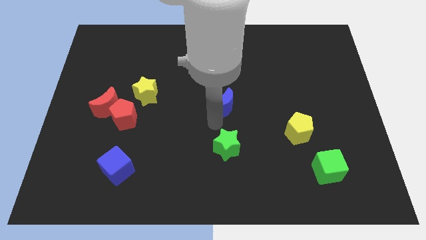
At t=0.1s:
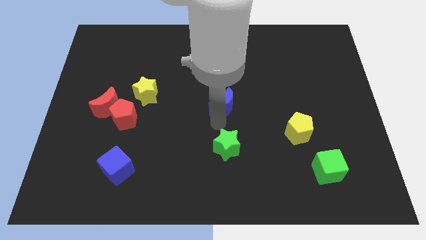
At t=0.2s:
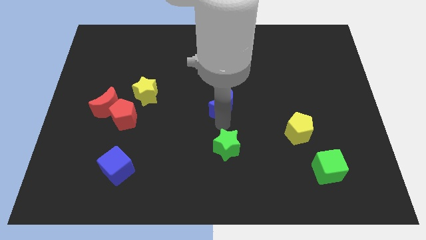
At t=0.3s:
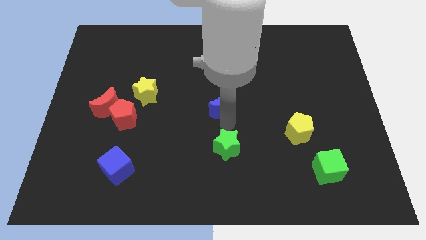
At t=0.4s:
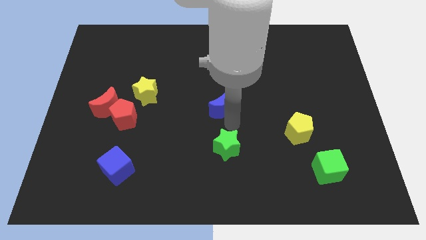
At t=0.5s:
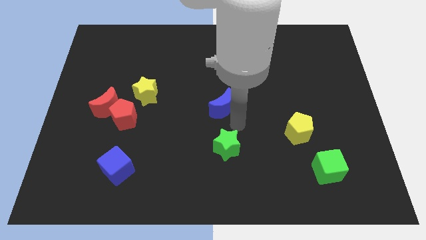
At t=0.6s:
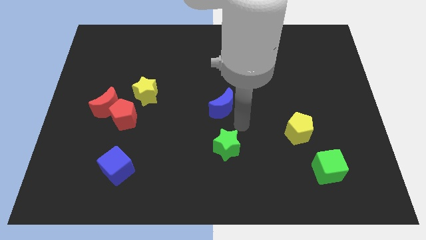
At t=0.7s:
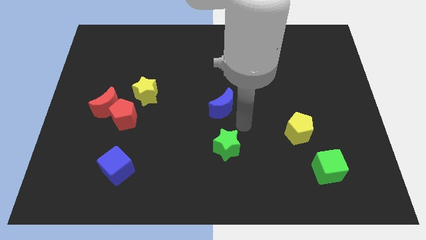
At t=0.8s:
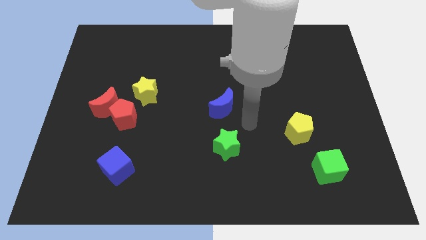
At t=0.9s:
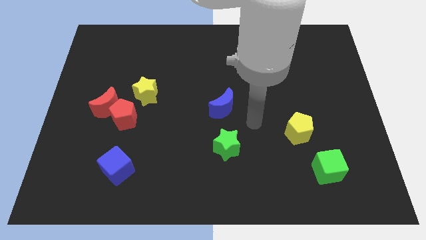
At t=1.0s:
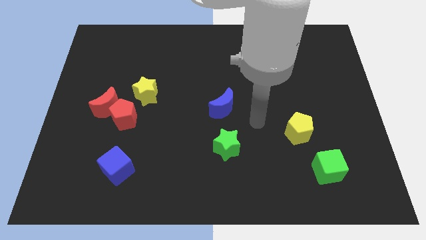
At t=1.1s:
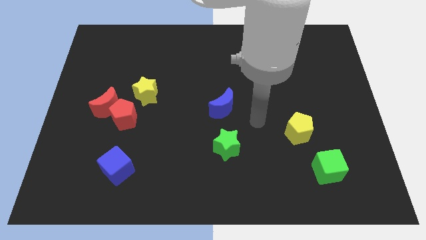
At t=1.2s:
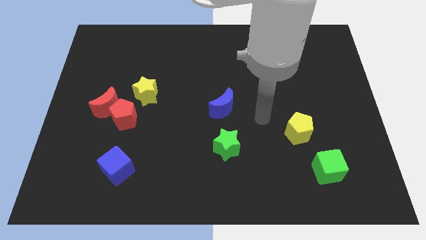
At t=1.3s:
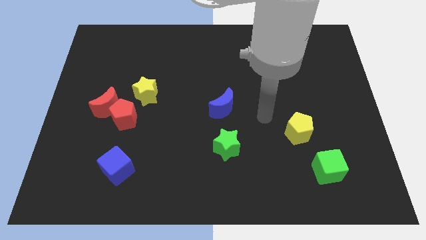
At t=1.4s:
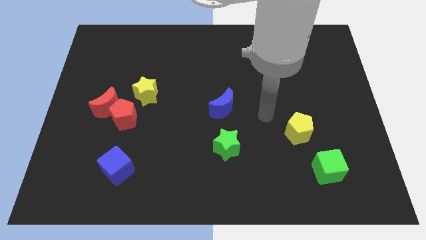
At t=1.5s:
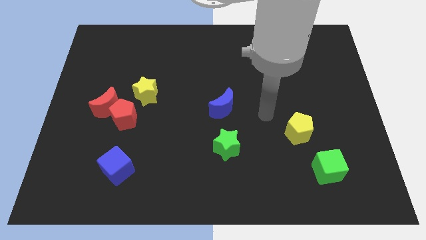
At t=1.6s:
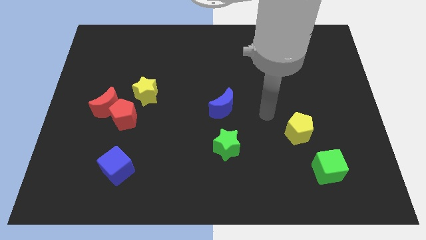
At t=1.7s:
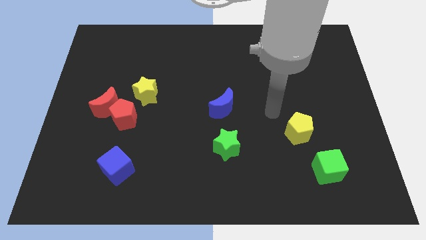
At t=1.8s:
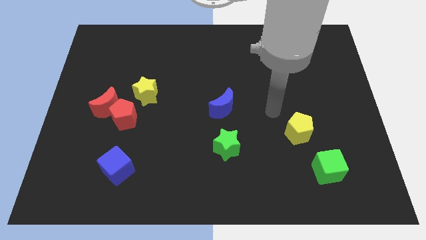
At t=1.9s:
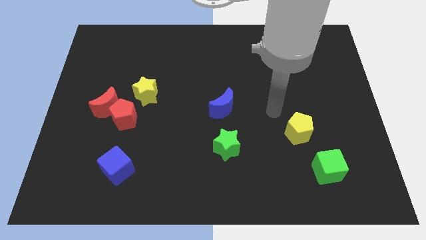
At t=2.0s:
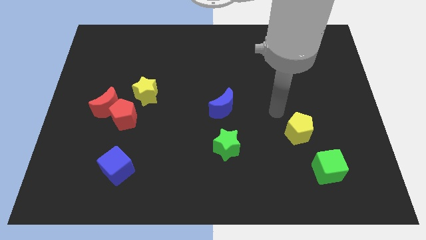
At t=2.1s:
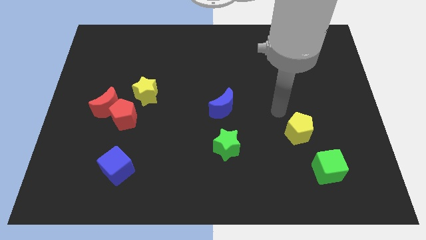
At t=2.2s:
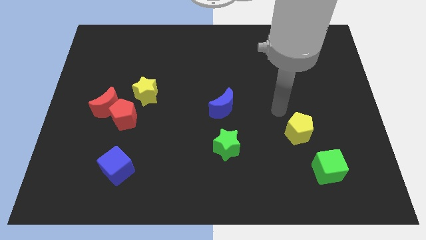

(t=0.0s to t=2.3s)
move arm towards the yellow pentagon

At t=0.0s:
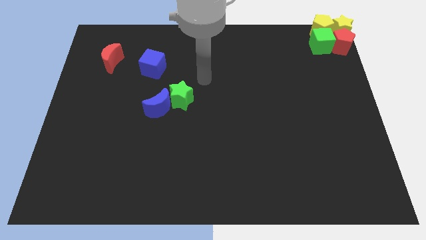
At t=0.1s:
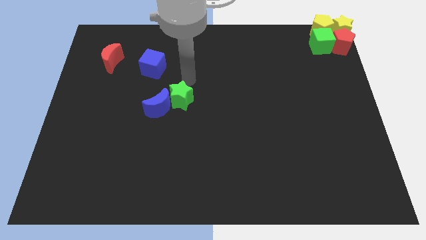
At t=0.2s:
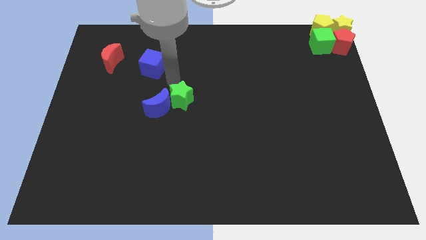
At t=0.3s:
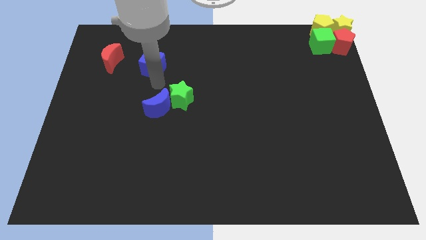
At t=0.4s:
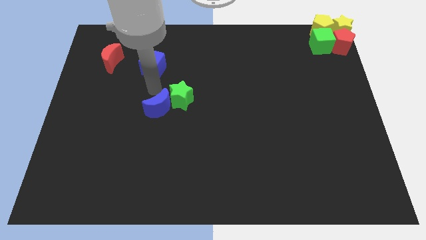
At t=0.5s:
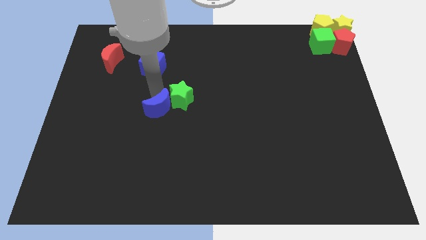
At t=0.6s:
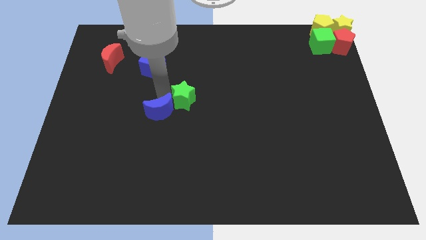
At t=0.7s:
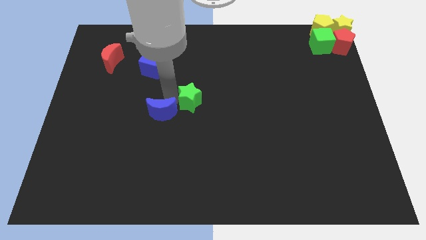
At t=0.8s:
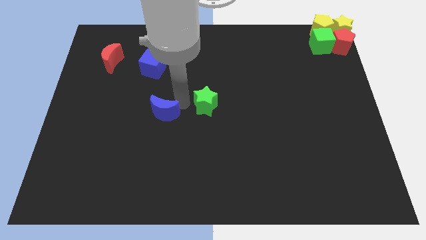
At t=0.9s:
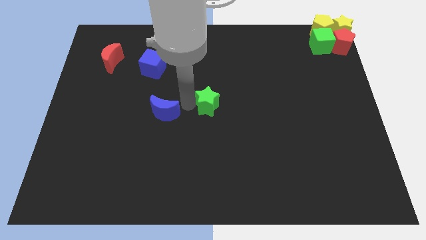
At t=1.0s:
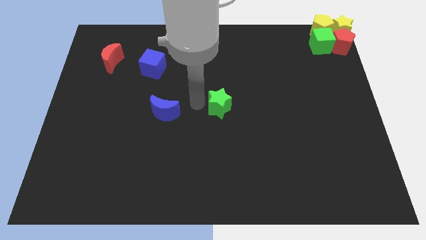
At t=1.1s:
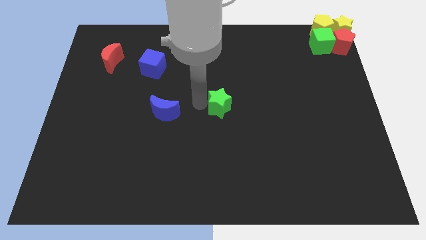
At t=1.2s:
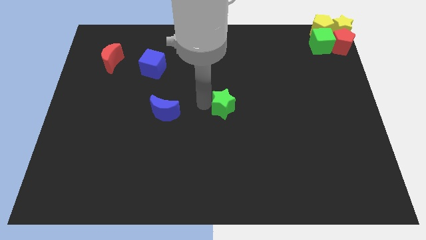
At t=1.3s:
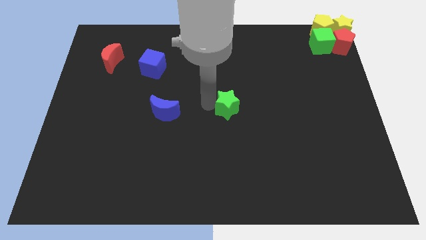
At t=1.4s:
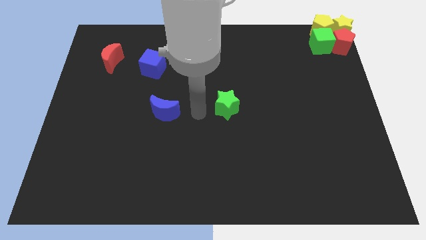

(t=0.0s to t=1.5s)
move the green star slightly to the right

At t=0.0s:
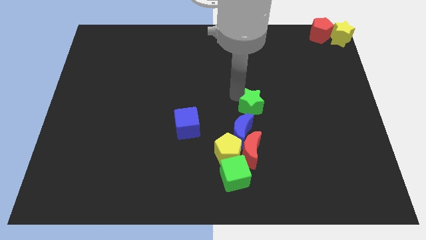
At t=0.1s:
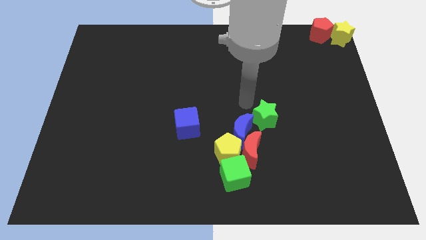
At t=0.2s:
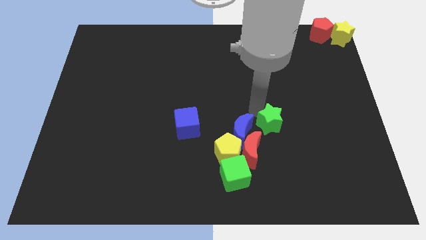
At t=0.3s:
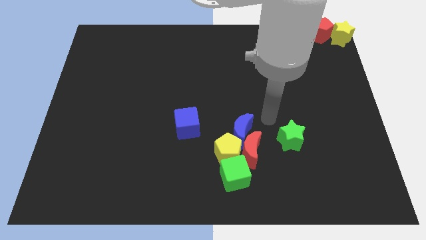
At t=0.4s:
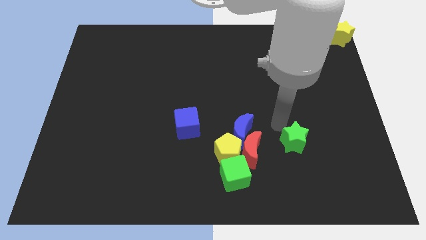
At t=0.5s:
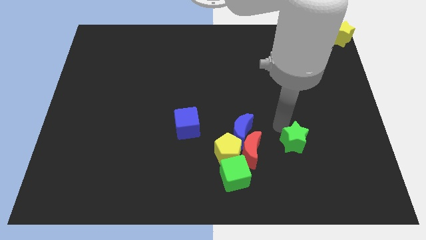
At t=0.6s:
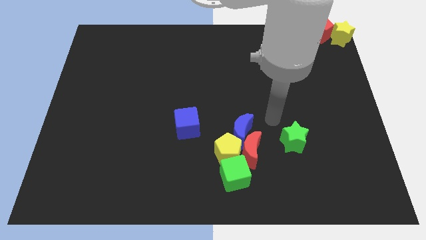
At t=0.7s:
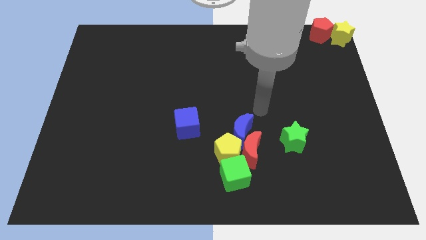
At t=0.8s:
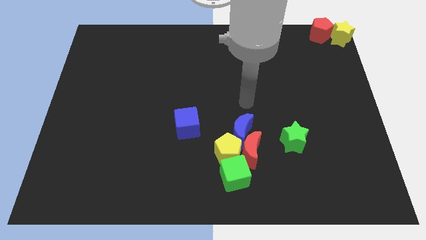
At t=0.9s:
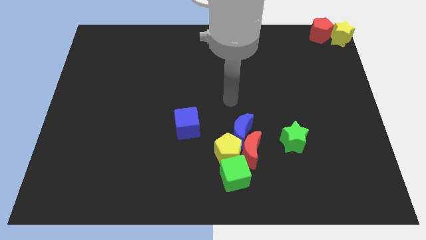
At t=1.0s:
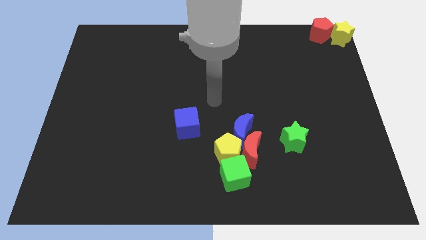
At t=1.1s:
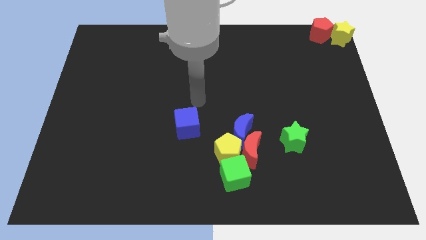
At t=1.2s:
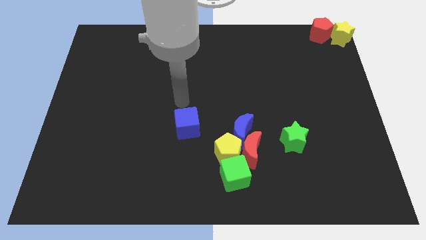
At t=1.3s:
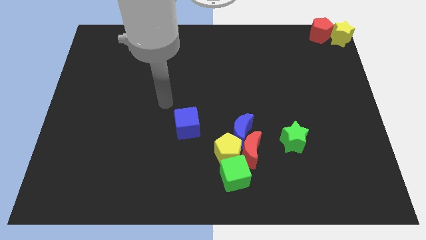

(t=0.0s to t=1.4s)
move the green star to the right of the red crescent

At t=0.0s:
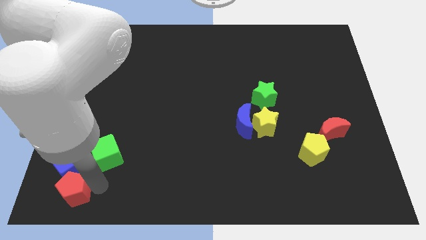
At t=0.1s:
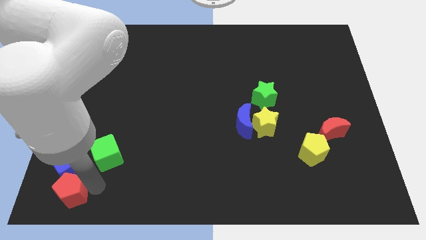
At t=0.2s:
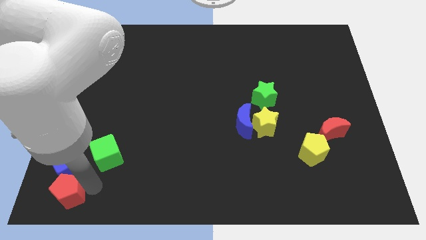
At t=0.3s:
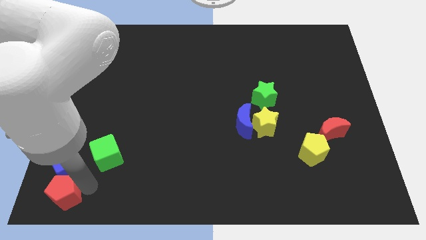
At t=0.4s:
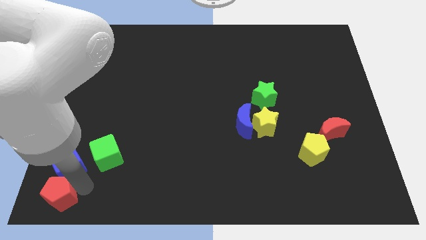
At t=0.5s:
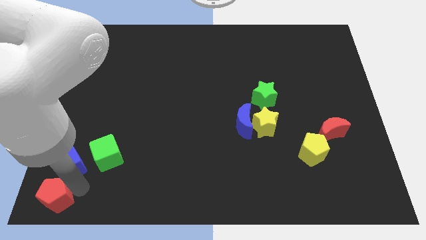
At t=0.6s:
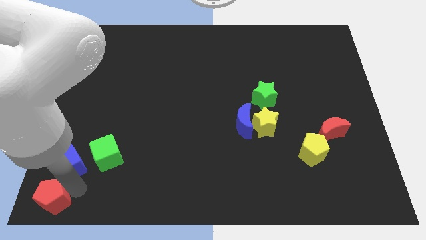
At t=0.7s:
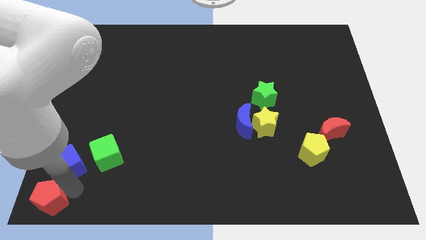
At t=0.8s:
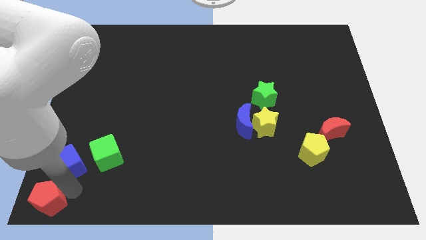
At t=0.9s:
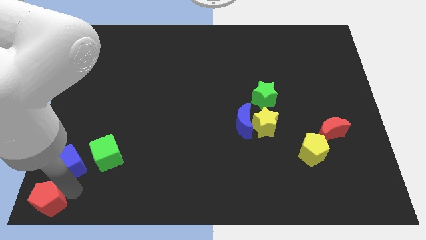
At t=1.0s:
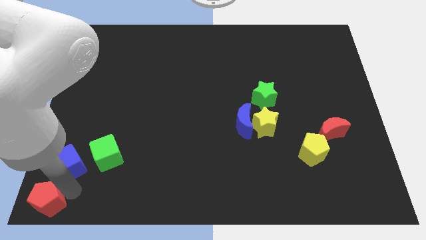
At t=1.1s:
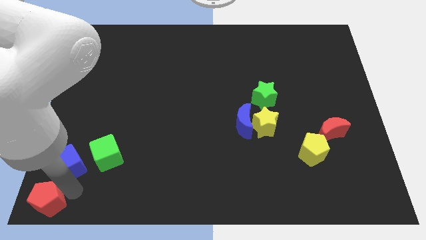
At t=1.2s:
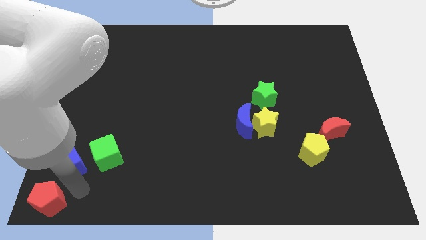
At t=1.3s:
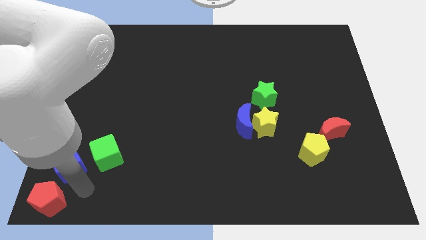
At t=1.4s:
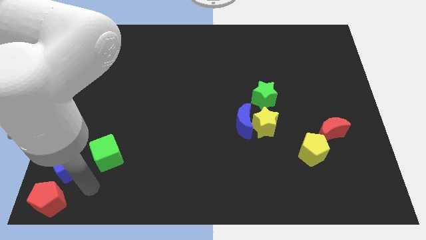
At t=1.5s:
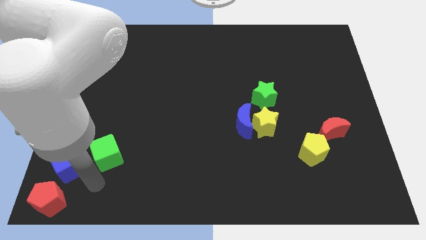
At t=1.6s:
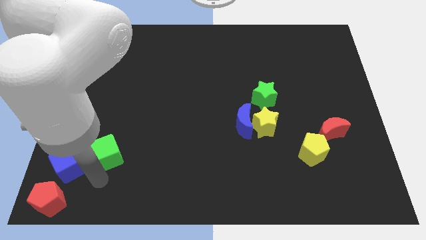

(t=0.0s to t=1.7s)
move slightly to the bottom left

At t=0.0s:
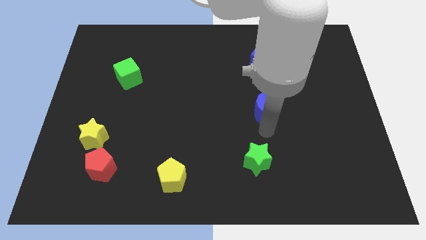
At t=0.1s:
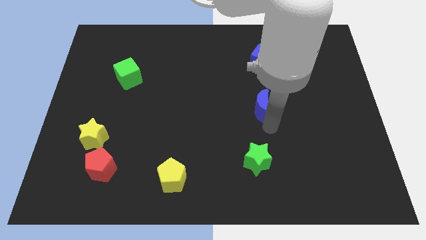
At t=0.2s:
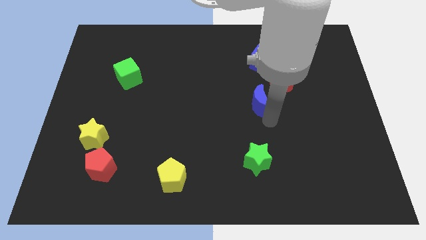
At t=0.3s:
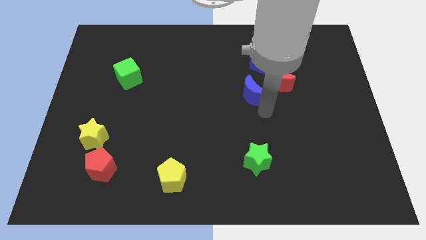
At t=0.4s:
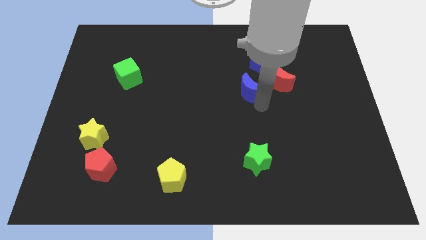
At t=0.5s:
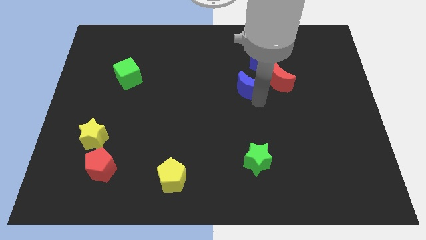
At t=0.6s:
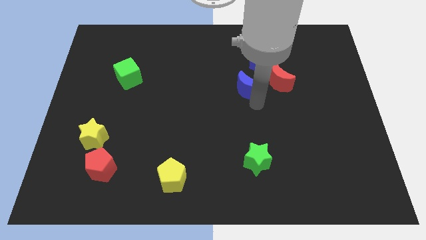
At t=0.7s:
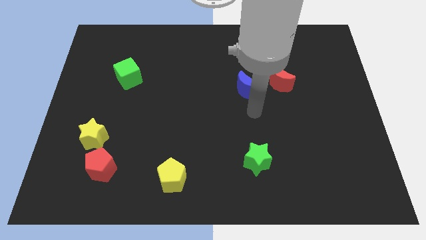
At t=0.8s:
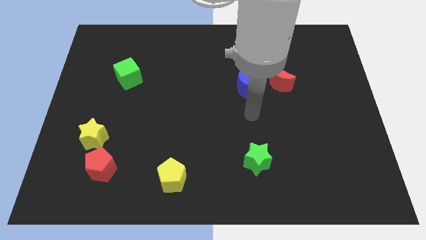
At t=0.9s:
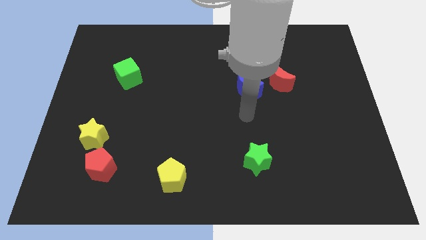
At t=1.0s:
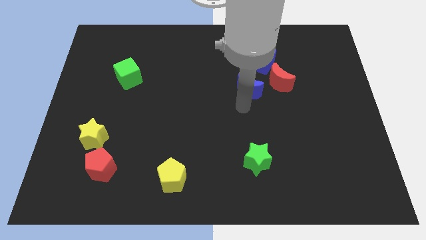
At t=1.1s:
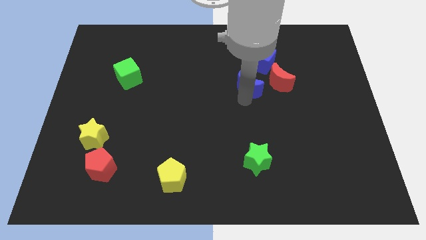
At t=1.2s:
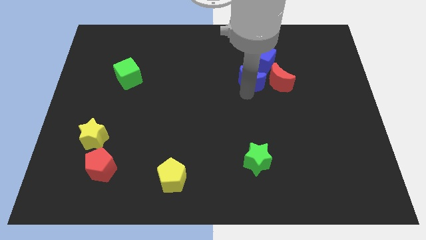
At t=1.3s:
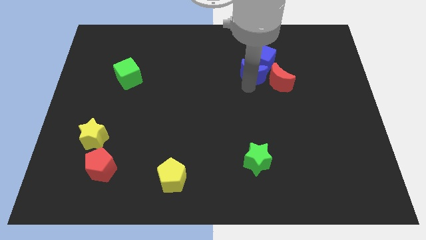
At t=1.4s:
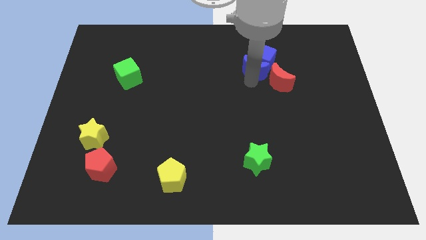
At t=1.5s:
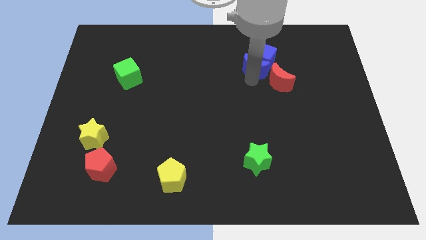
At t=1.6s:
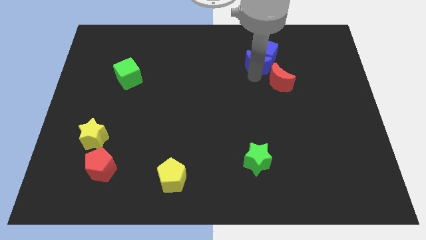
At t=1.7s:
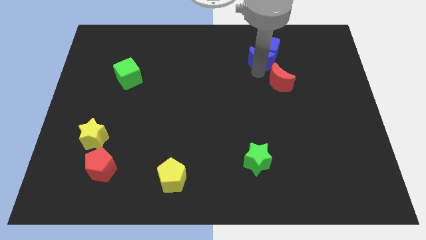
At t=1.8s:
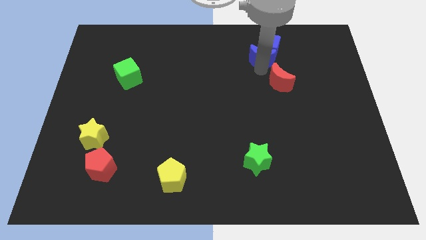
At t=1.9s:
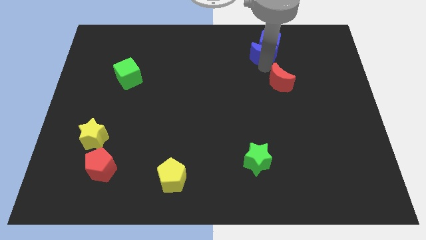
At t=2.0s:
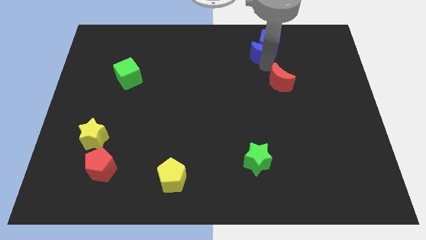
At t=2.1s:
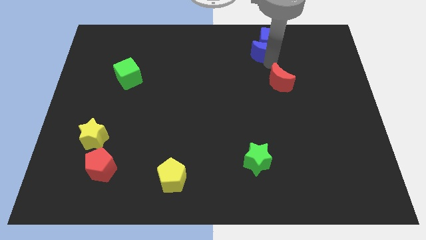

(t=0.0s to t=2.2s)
push the blue crescent into blue cube
